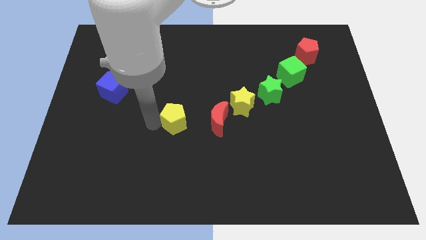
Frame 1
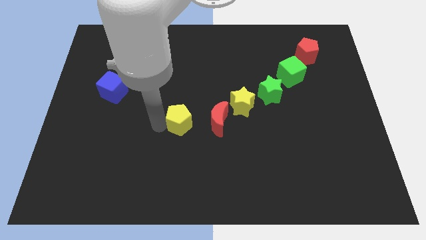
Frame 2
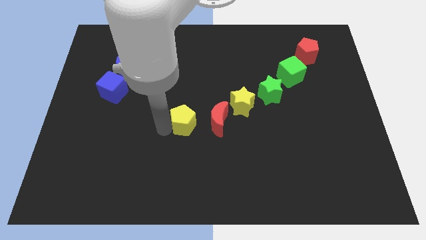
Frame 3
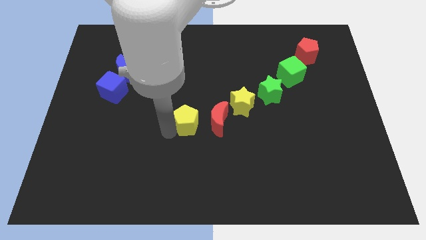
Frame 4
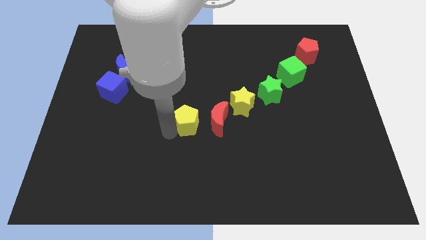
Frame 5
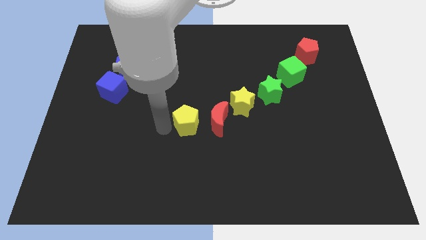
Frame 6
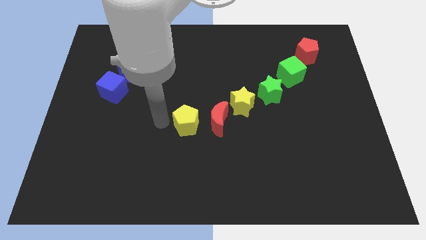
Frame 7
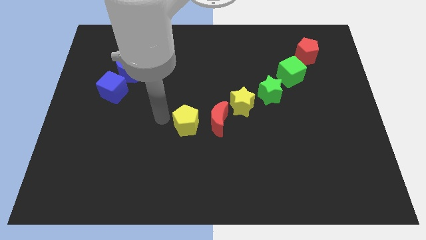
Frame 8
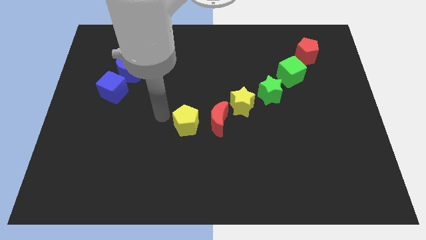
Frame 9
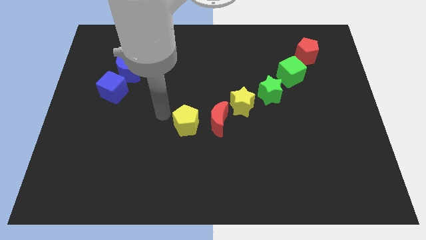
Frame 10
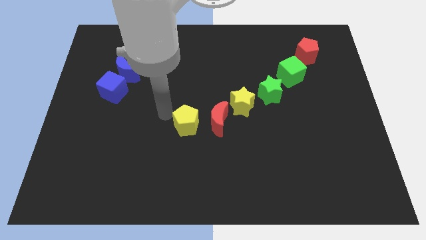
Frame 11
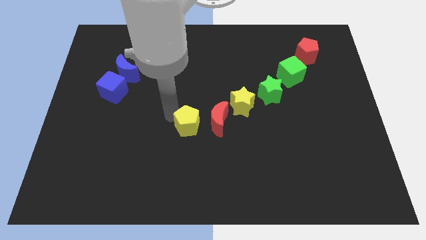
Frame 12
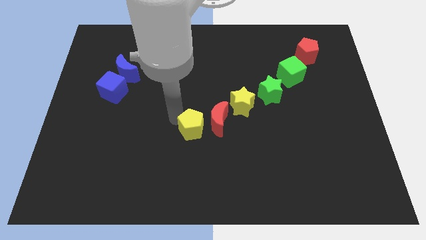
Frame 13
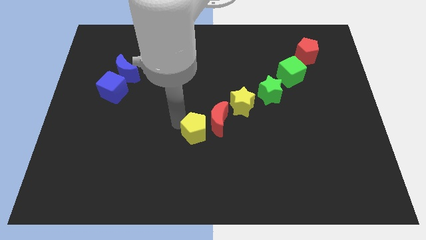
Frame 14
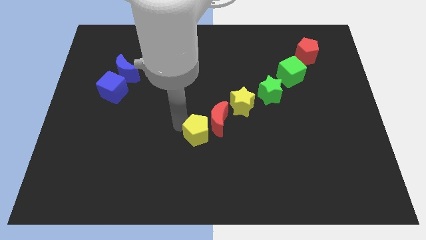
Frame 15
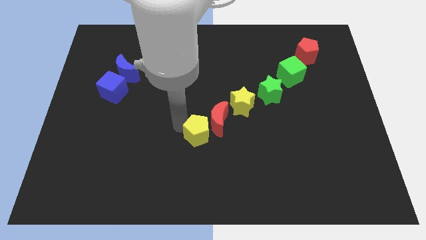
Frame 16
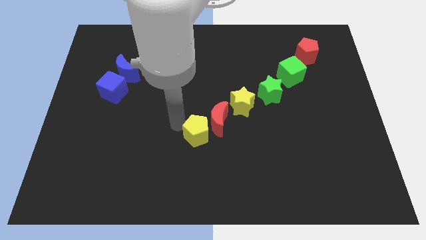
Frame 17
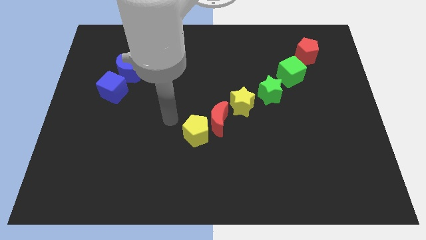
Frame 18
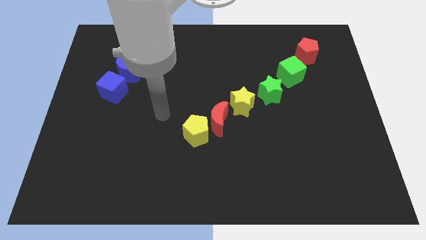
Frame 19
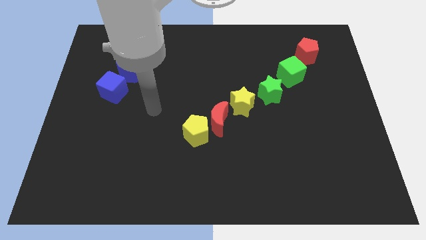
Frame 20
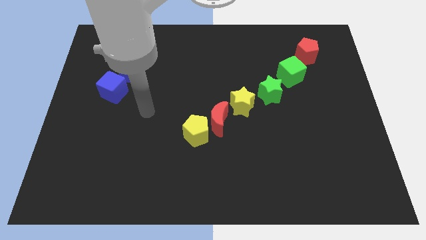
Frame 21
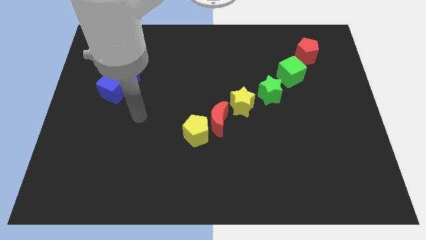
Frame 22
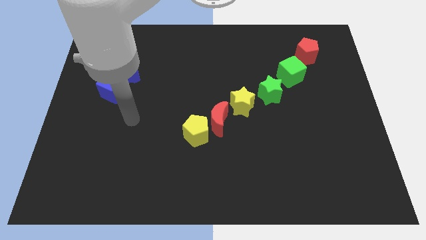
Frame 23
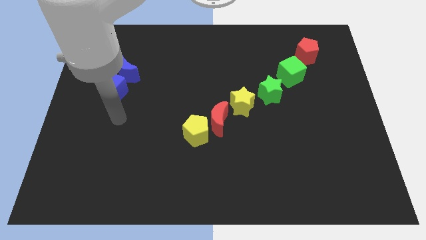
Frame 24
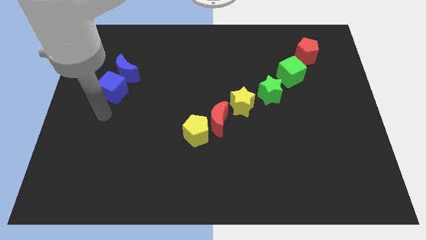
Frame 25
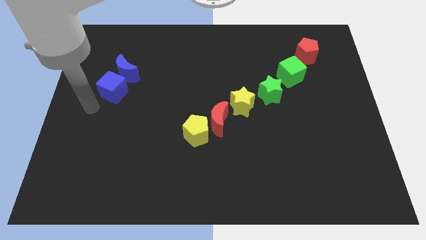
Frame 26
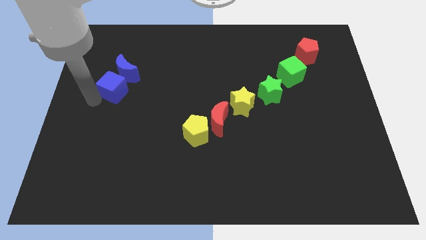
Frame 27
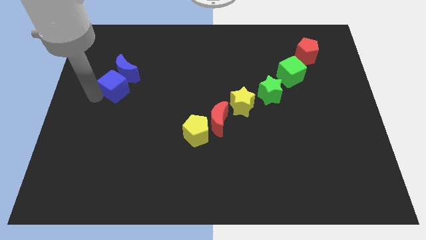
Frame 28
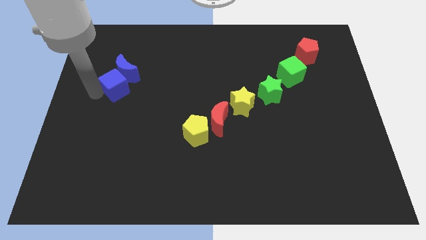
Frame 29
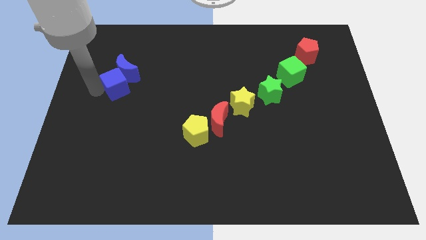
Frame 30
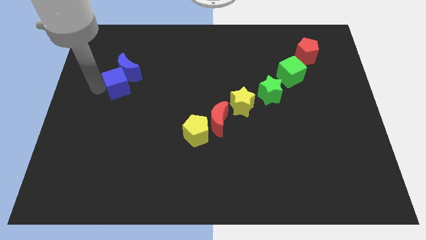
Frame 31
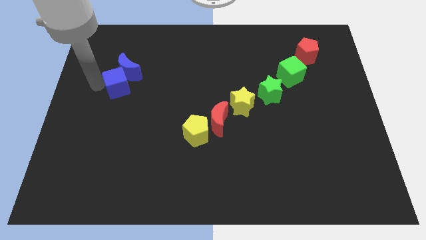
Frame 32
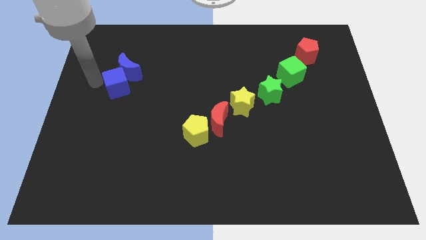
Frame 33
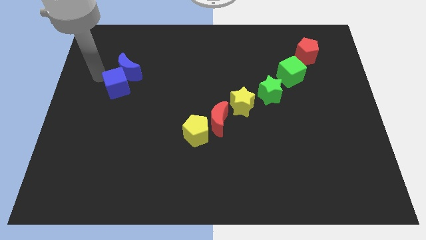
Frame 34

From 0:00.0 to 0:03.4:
push blue cube slightly into blue moon

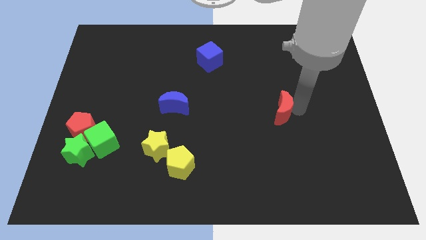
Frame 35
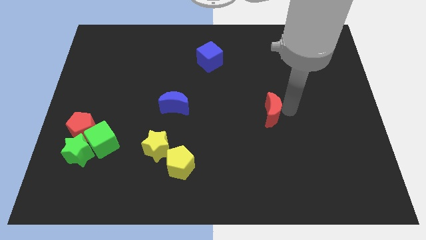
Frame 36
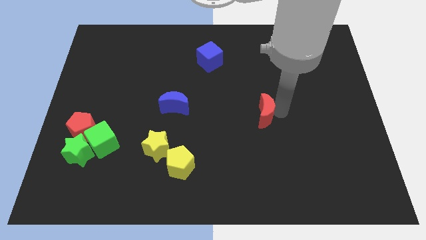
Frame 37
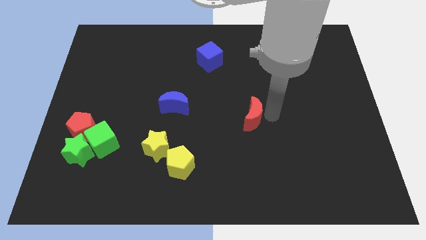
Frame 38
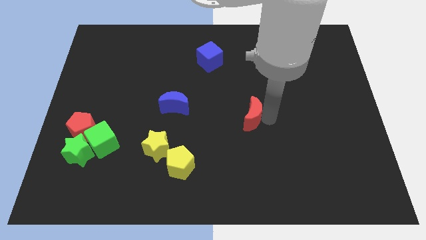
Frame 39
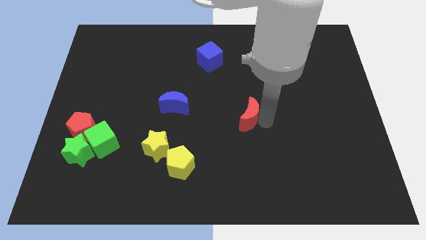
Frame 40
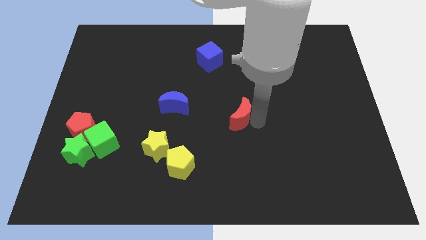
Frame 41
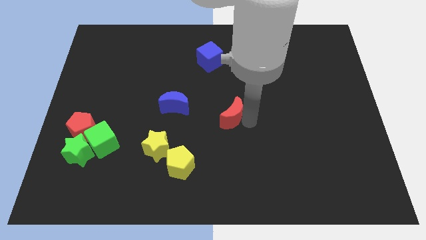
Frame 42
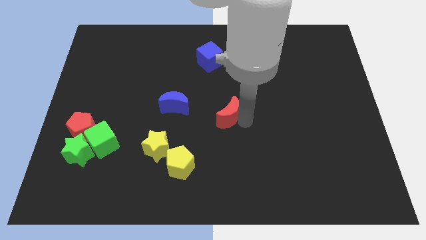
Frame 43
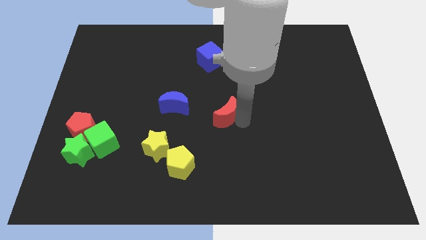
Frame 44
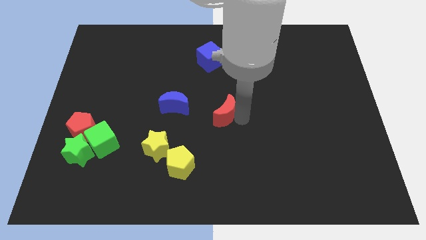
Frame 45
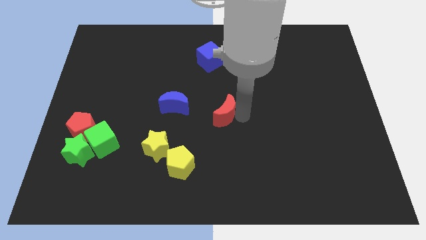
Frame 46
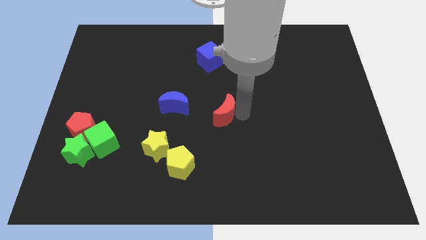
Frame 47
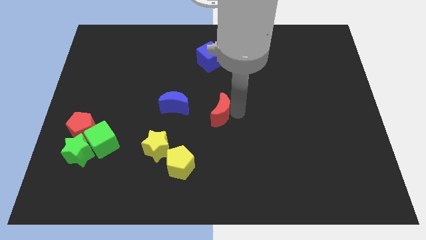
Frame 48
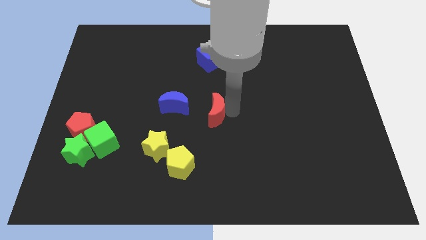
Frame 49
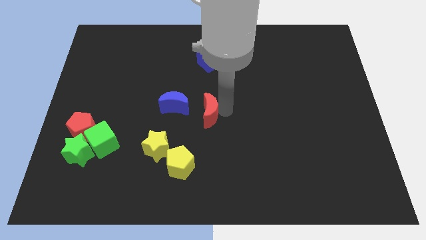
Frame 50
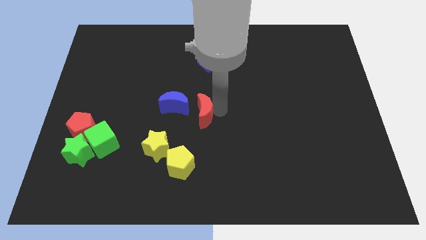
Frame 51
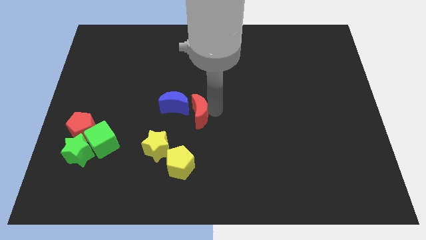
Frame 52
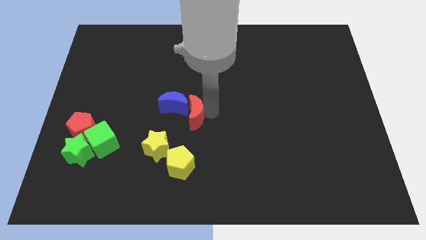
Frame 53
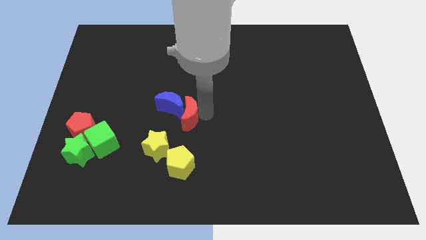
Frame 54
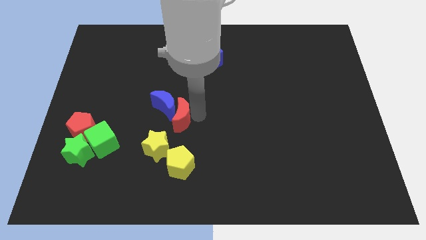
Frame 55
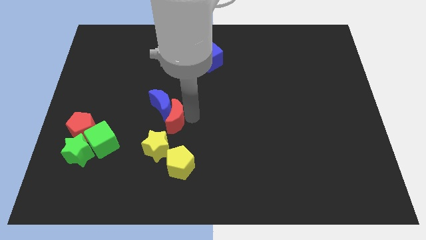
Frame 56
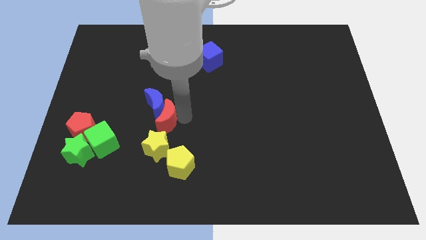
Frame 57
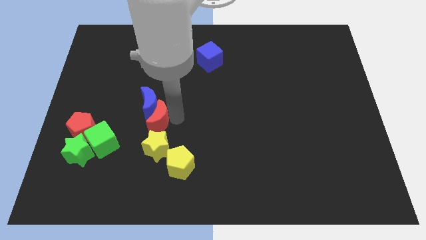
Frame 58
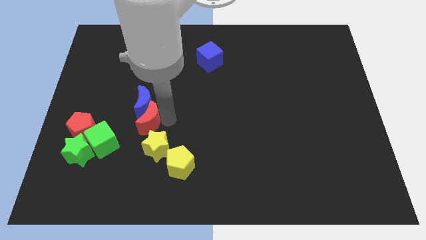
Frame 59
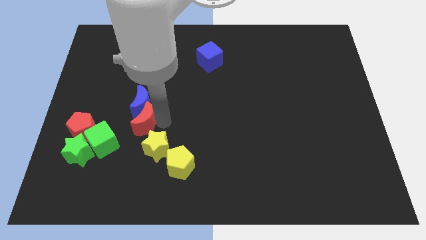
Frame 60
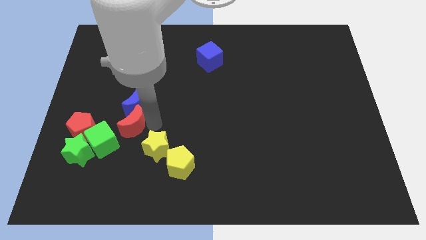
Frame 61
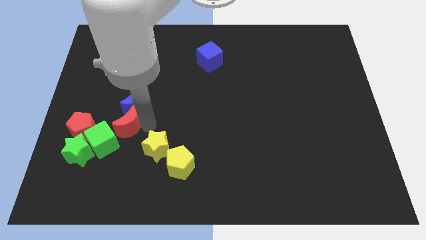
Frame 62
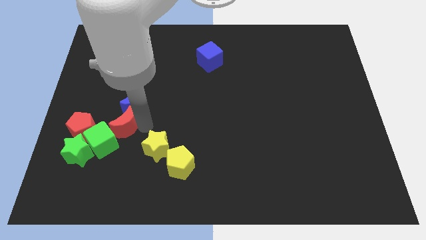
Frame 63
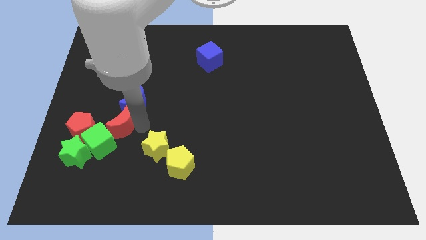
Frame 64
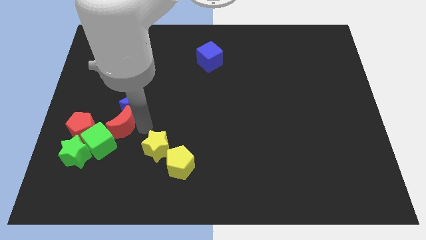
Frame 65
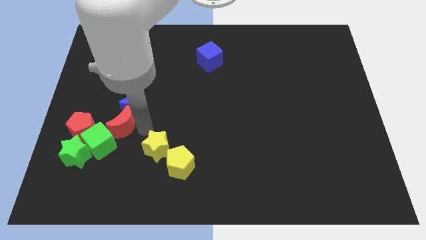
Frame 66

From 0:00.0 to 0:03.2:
push the red crescent to the bottom of the blue crescent

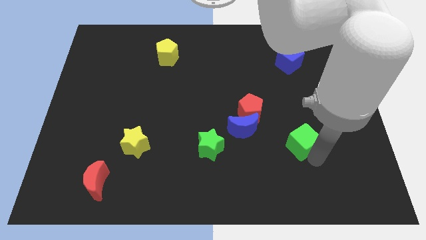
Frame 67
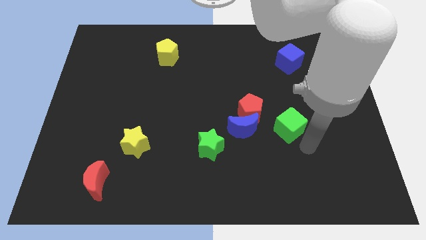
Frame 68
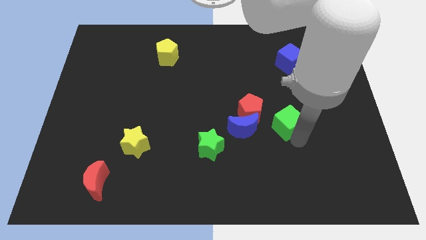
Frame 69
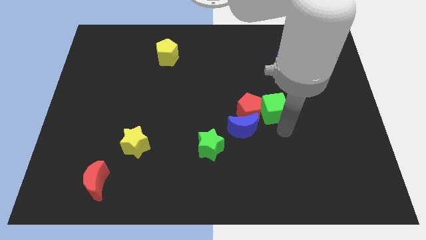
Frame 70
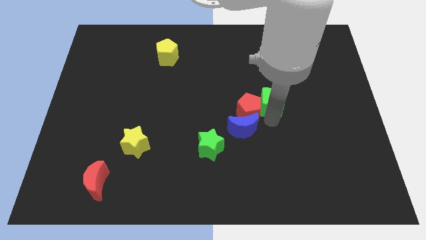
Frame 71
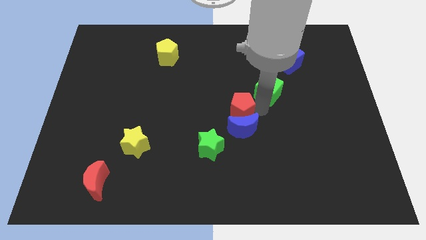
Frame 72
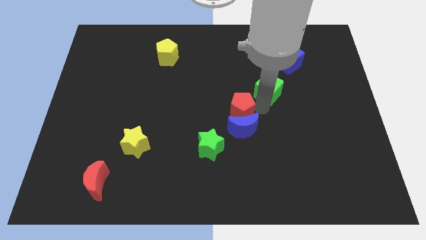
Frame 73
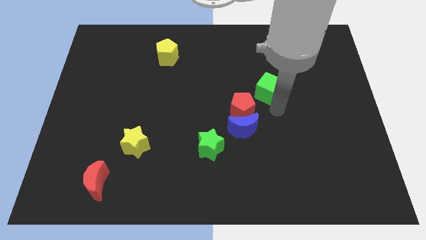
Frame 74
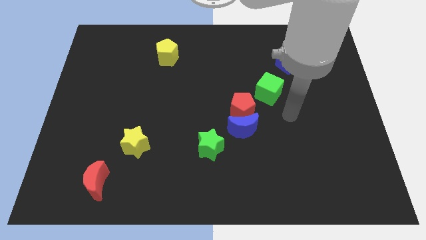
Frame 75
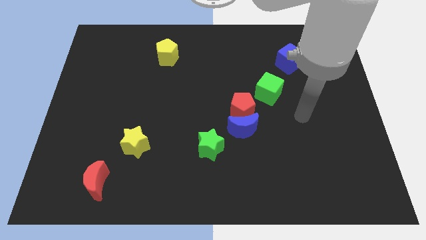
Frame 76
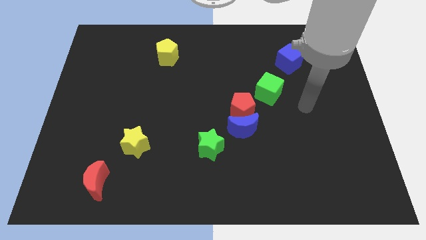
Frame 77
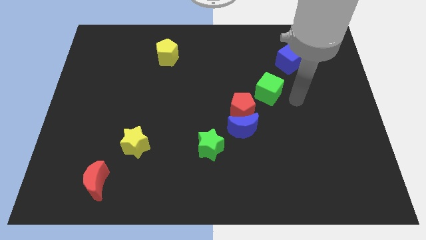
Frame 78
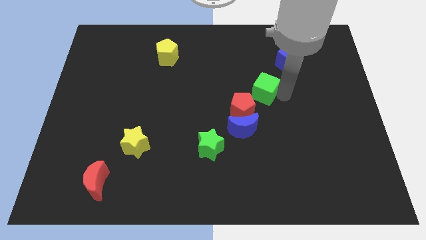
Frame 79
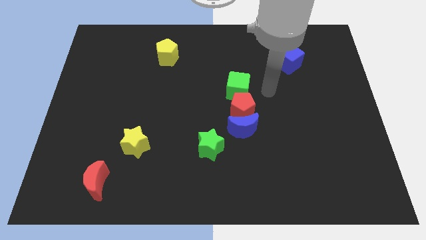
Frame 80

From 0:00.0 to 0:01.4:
place the green cube above the red pentagon

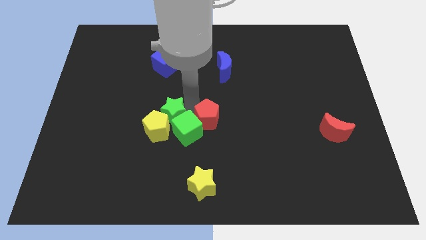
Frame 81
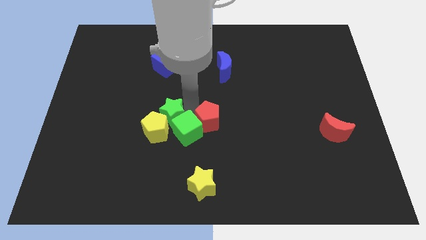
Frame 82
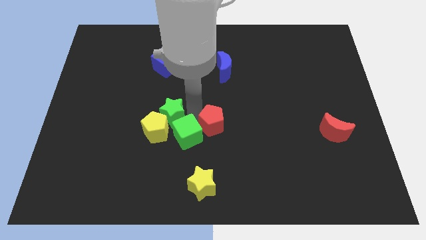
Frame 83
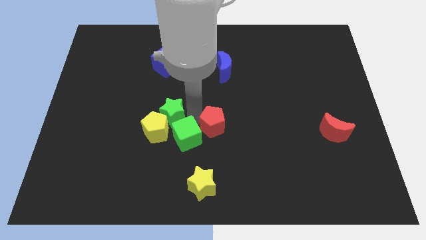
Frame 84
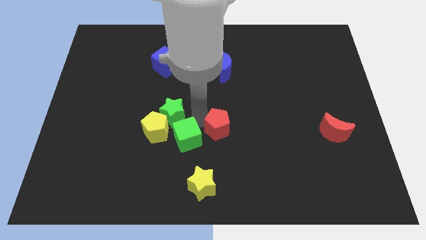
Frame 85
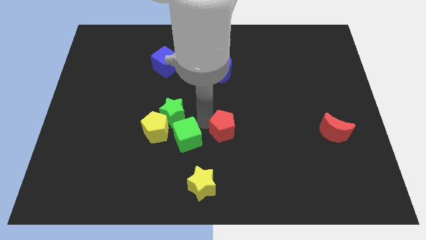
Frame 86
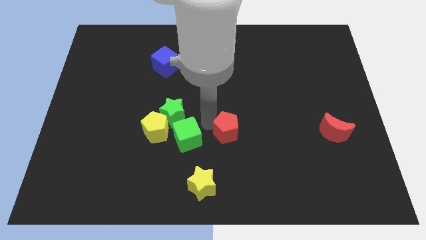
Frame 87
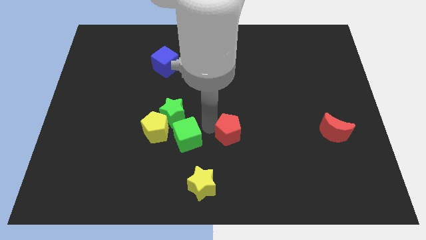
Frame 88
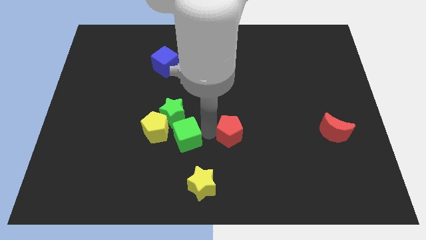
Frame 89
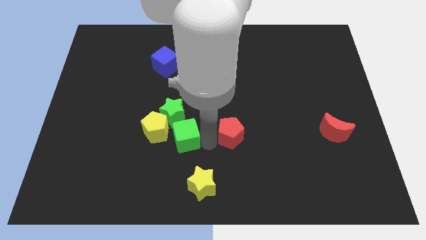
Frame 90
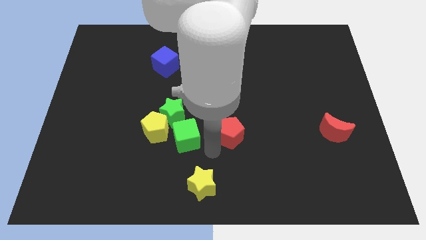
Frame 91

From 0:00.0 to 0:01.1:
separate red pentagon and green cube

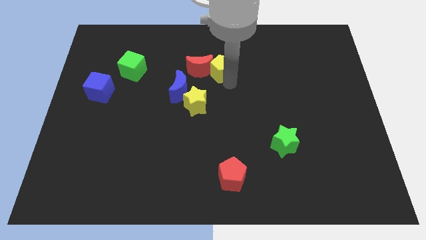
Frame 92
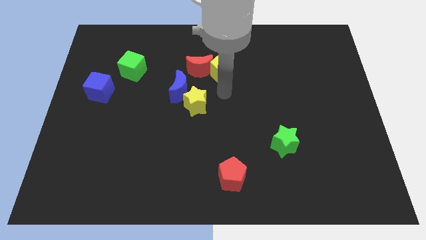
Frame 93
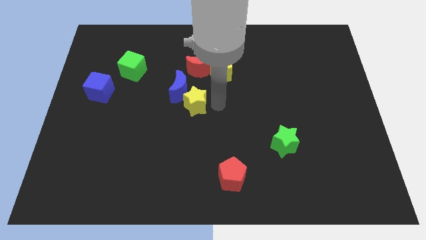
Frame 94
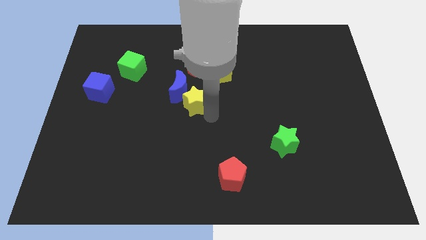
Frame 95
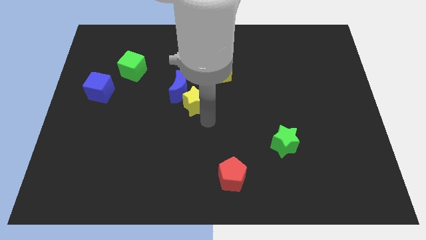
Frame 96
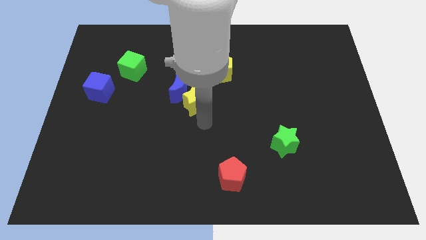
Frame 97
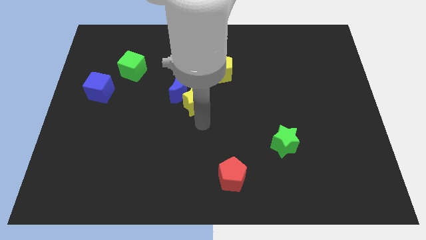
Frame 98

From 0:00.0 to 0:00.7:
point your arm at the bottom of yellow star
